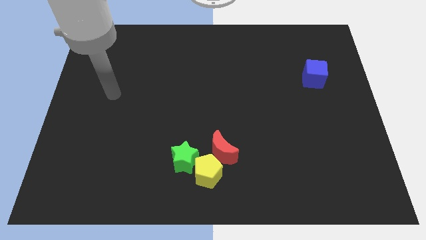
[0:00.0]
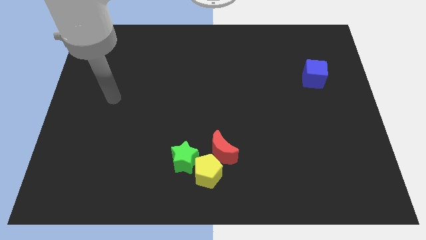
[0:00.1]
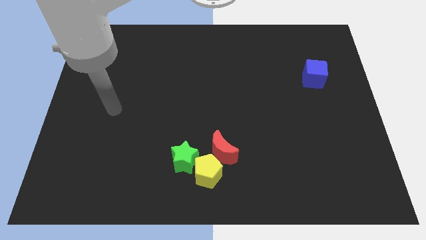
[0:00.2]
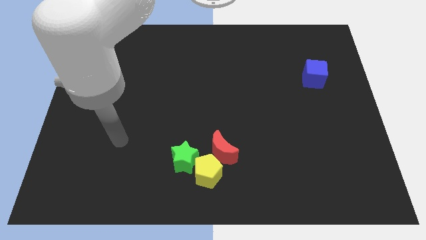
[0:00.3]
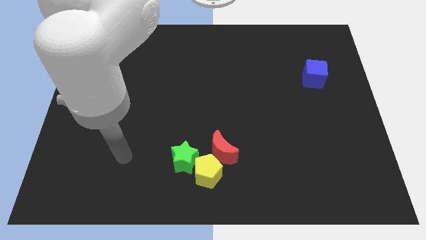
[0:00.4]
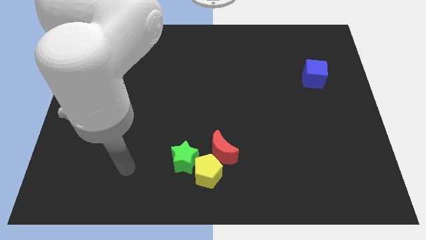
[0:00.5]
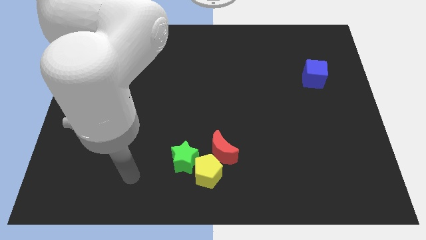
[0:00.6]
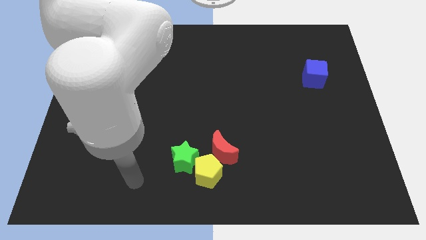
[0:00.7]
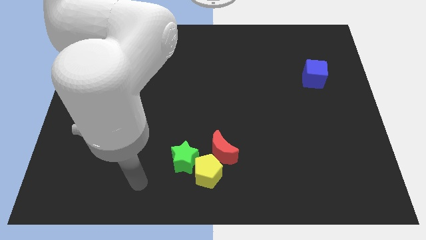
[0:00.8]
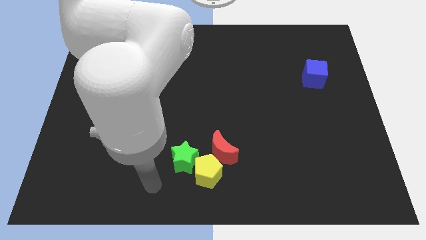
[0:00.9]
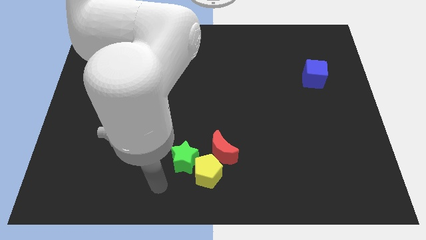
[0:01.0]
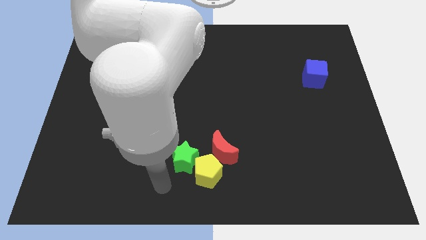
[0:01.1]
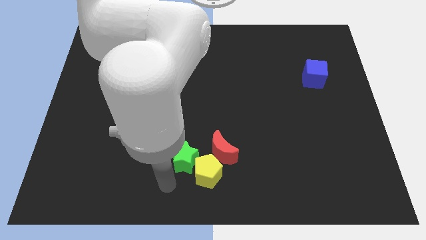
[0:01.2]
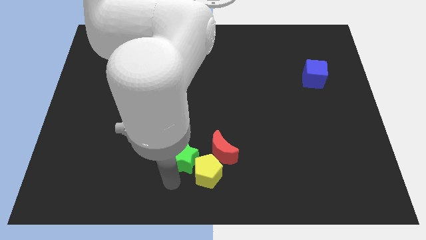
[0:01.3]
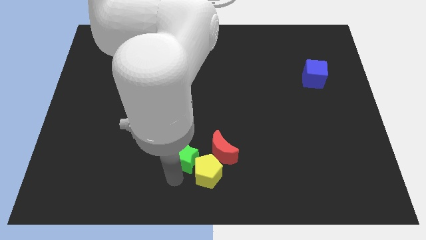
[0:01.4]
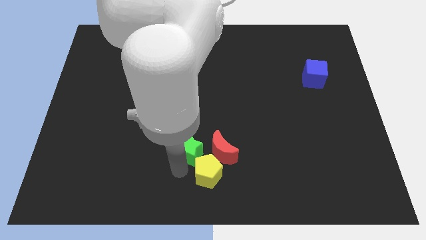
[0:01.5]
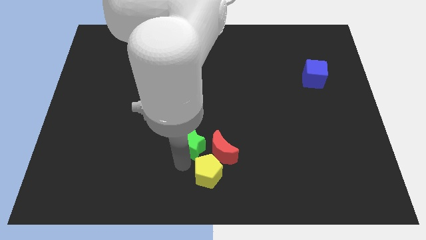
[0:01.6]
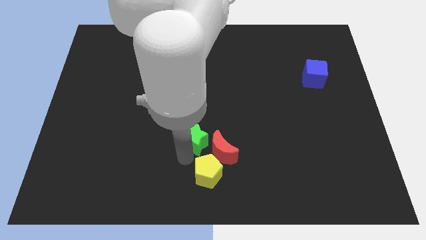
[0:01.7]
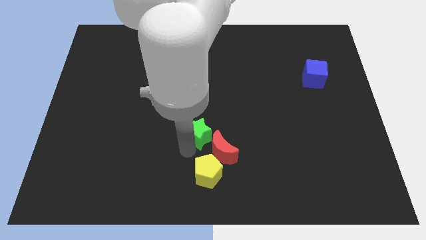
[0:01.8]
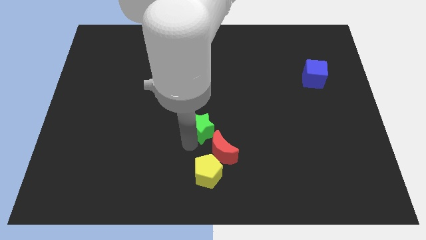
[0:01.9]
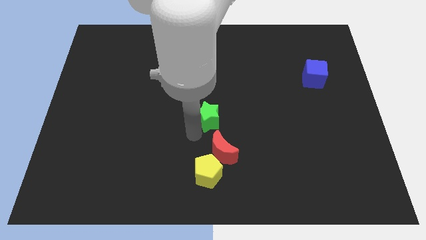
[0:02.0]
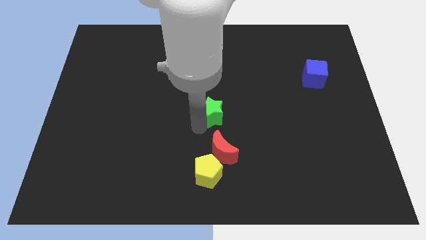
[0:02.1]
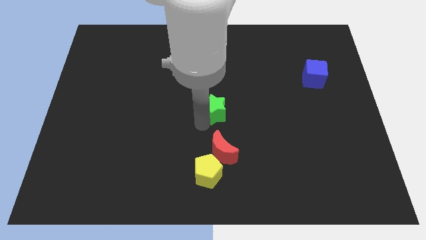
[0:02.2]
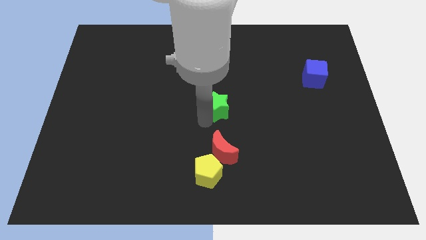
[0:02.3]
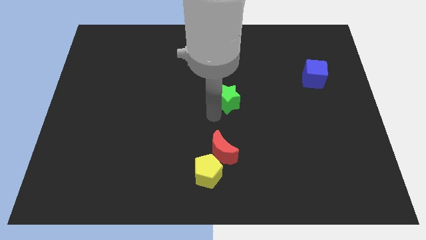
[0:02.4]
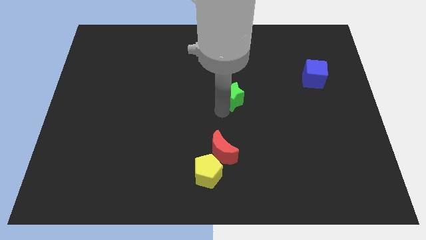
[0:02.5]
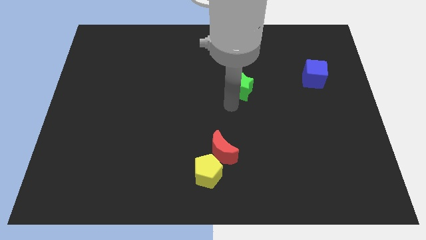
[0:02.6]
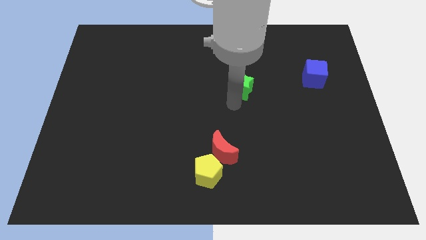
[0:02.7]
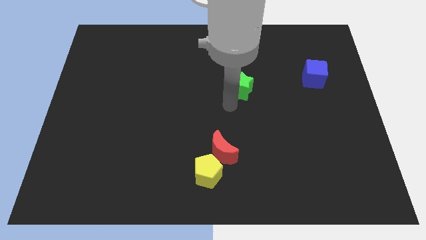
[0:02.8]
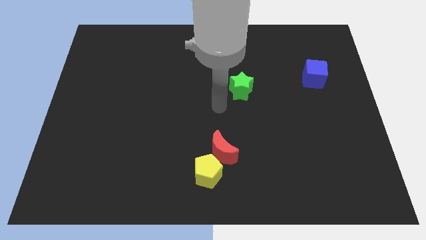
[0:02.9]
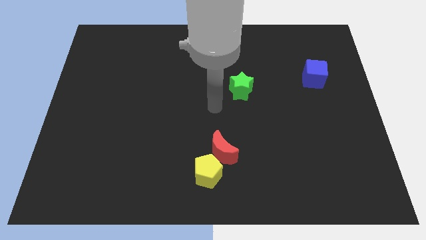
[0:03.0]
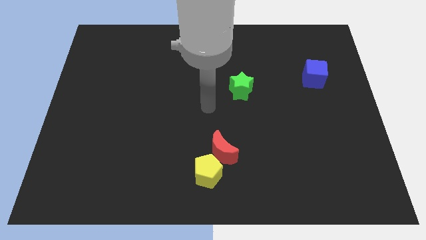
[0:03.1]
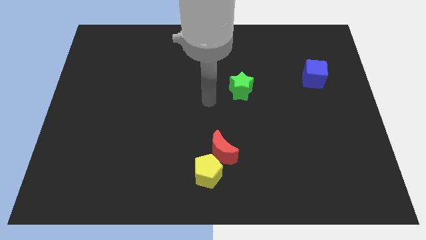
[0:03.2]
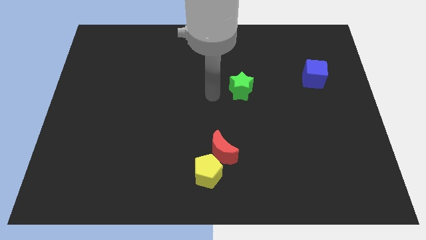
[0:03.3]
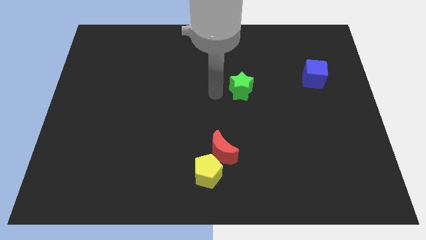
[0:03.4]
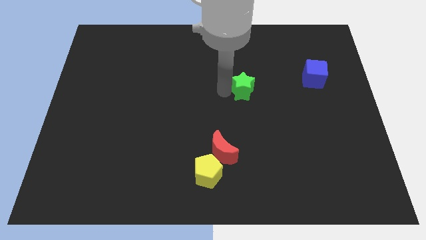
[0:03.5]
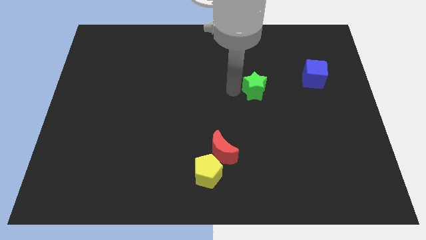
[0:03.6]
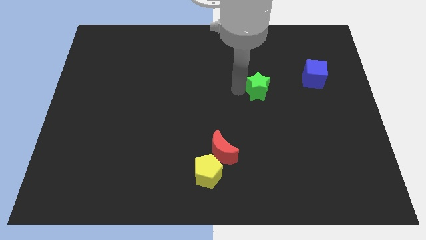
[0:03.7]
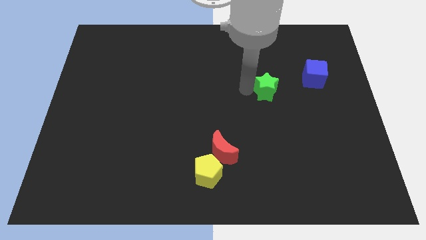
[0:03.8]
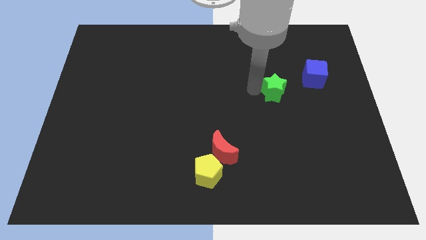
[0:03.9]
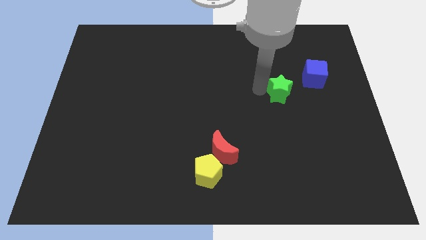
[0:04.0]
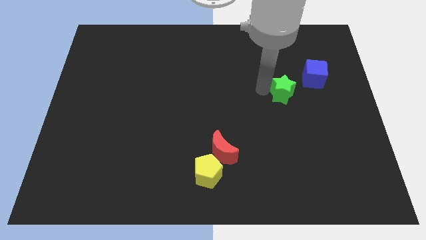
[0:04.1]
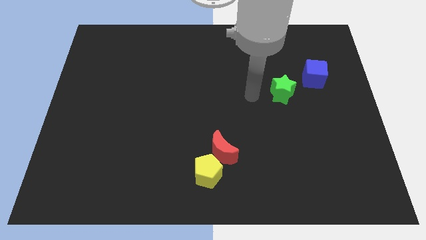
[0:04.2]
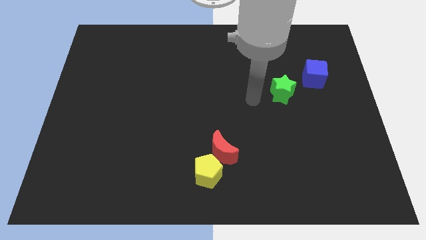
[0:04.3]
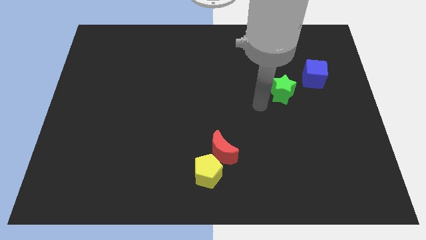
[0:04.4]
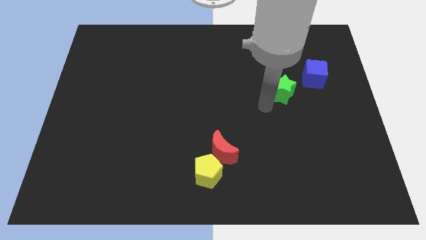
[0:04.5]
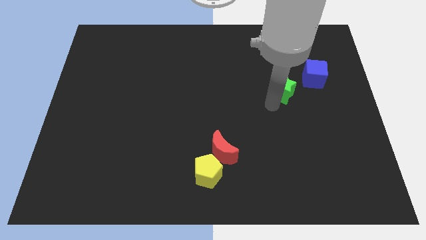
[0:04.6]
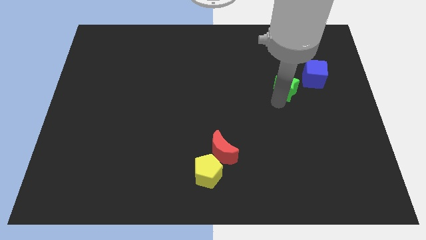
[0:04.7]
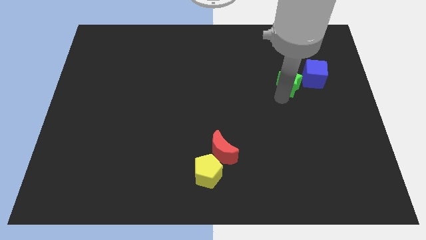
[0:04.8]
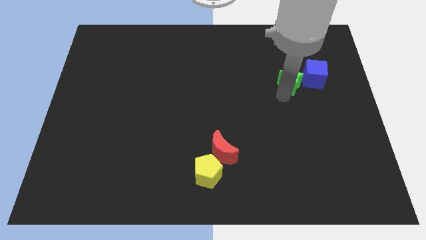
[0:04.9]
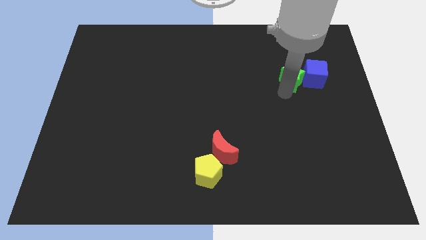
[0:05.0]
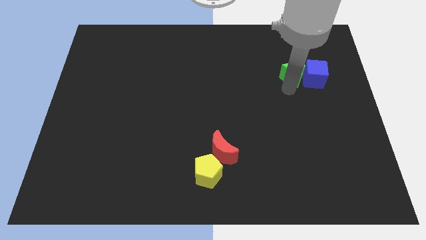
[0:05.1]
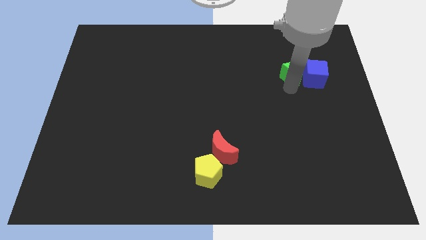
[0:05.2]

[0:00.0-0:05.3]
move the green star towards the blue cube

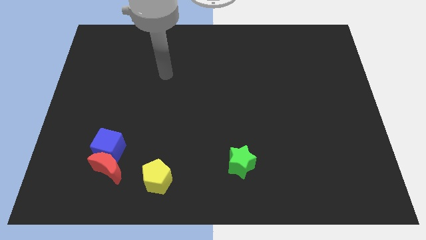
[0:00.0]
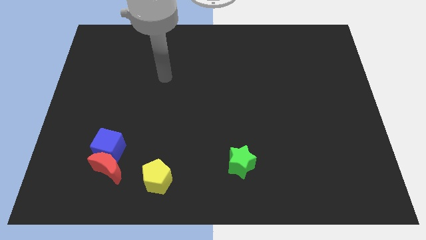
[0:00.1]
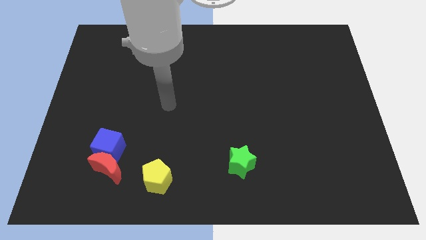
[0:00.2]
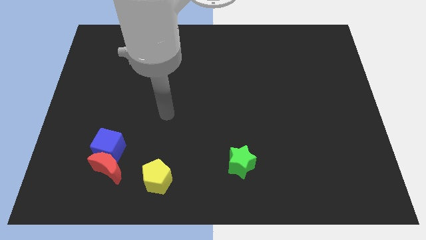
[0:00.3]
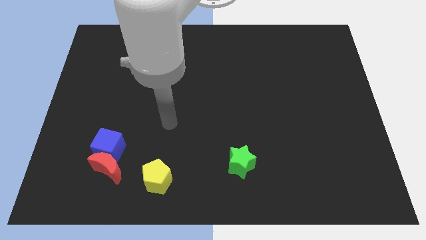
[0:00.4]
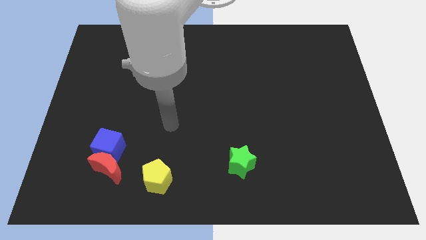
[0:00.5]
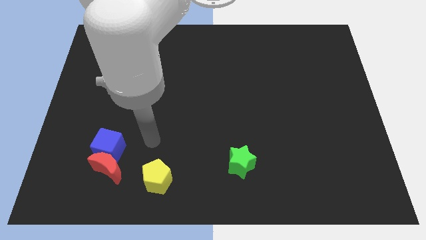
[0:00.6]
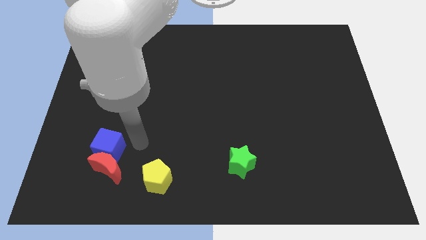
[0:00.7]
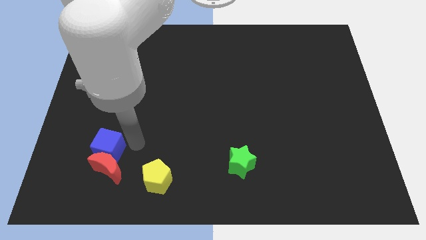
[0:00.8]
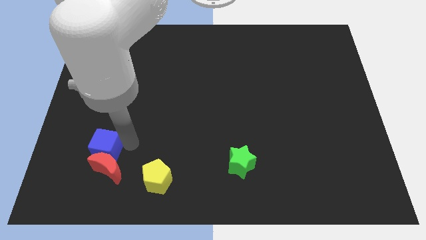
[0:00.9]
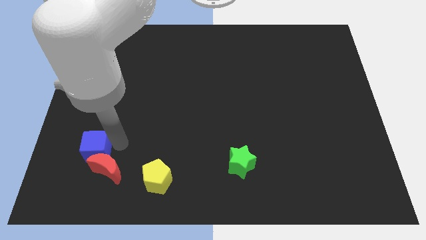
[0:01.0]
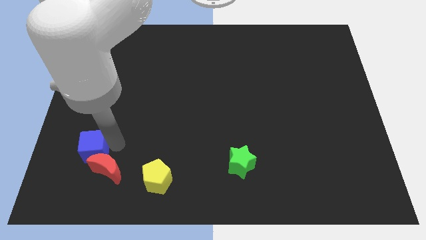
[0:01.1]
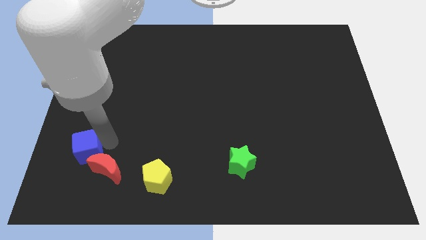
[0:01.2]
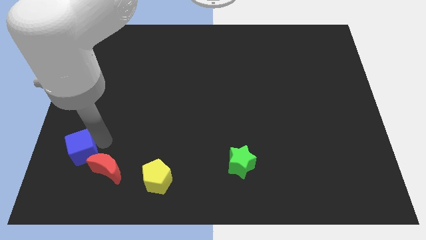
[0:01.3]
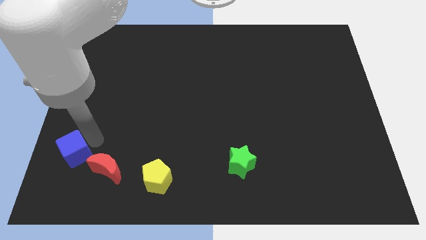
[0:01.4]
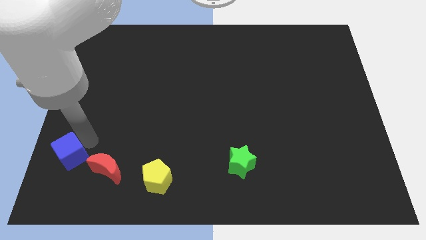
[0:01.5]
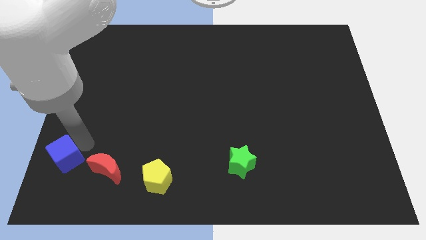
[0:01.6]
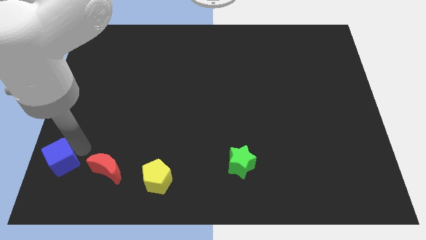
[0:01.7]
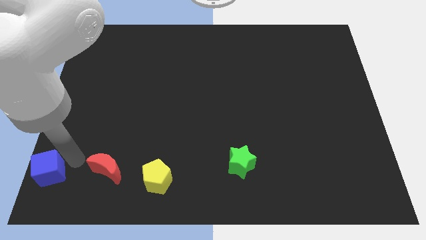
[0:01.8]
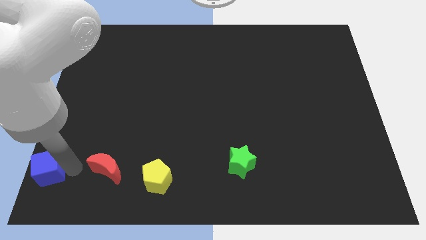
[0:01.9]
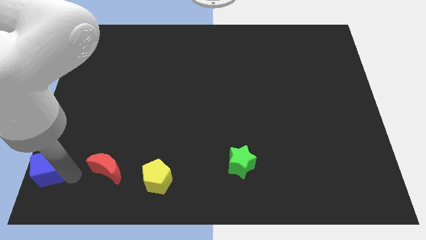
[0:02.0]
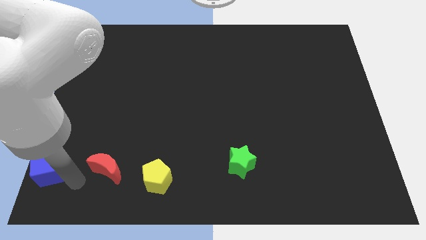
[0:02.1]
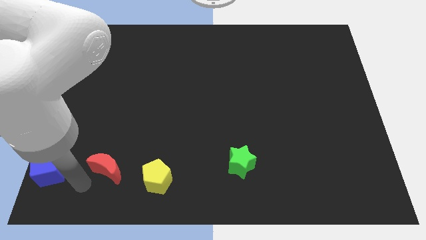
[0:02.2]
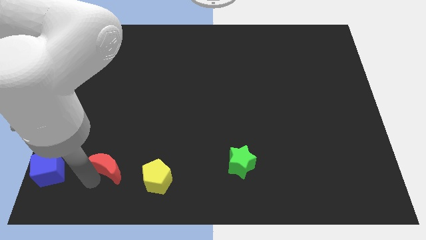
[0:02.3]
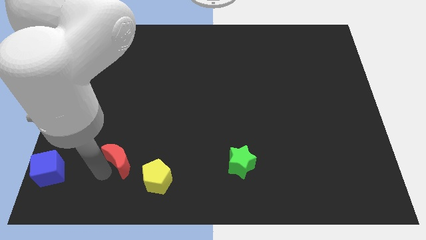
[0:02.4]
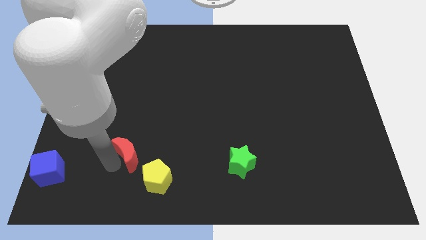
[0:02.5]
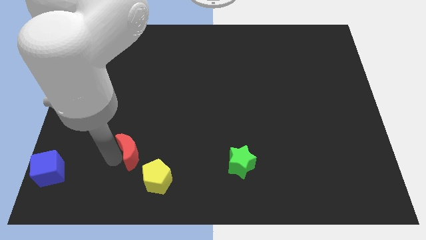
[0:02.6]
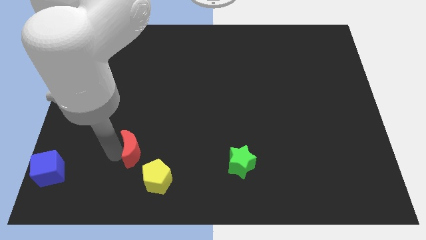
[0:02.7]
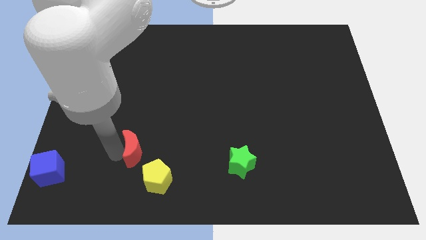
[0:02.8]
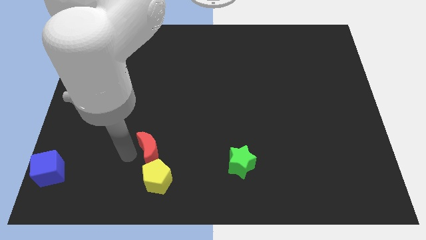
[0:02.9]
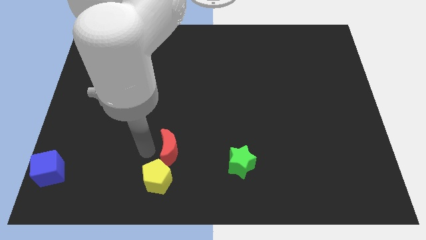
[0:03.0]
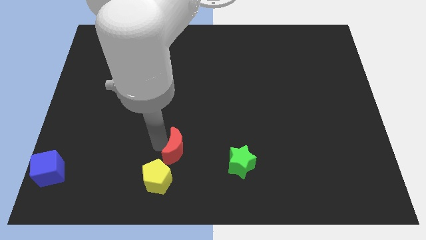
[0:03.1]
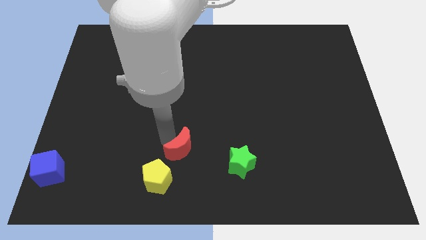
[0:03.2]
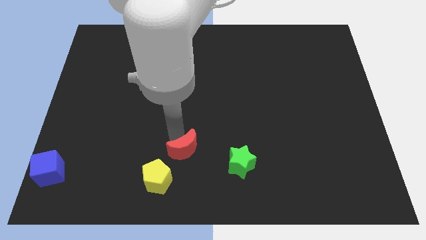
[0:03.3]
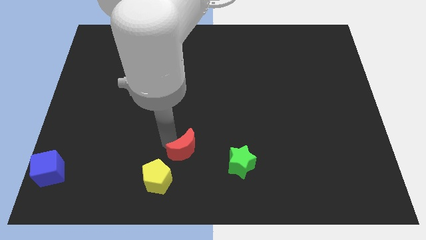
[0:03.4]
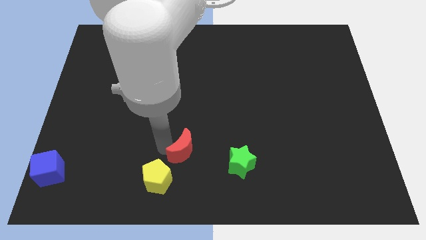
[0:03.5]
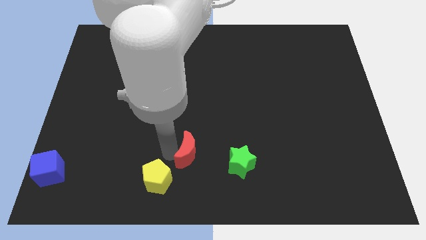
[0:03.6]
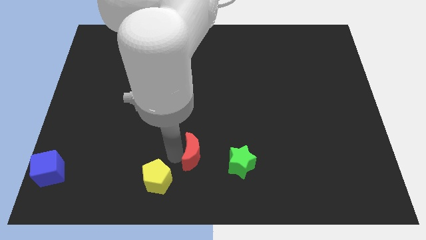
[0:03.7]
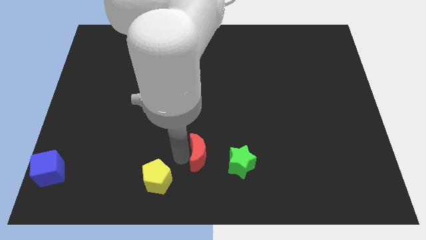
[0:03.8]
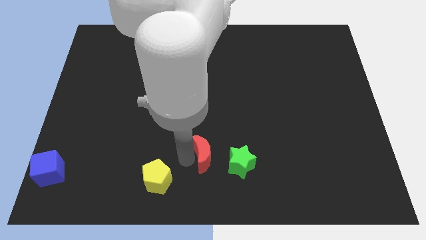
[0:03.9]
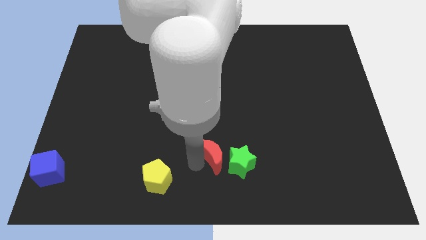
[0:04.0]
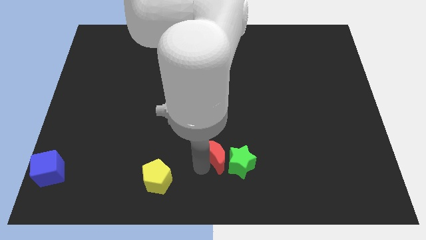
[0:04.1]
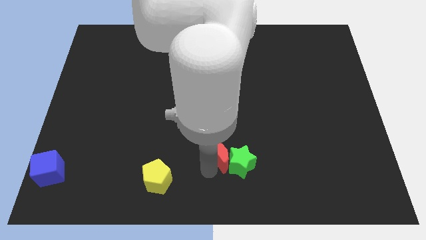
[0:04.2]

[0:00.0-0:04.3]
move the moon to the star
